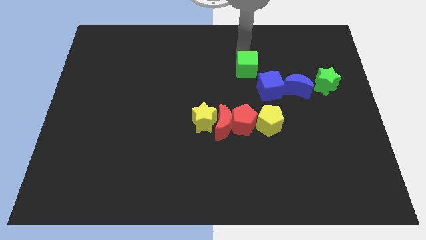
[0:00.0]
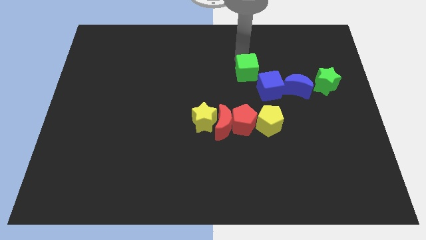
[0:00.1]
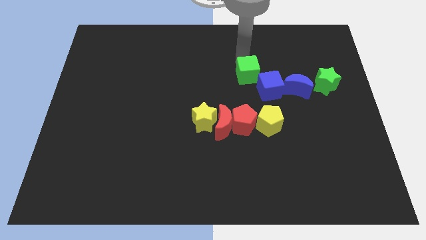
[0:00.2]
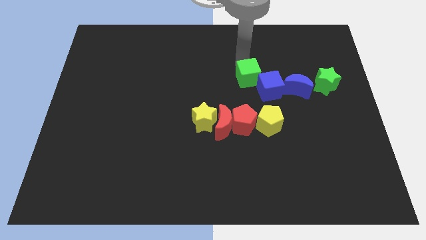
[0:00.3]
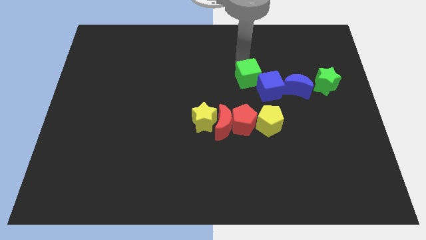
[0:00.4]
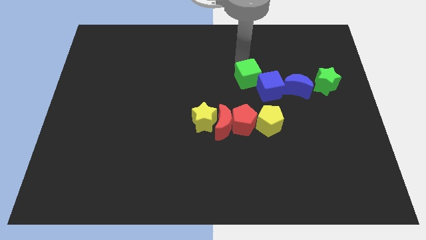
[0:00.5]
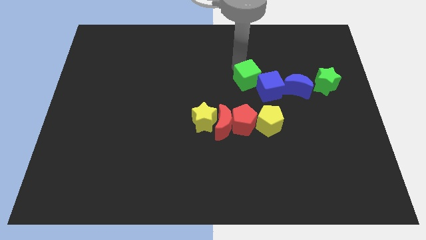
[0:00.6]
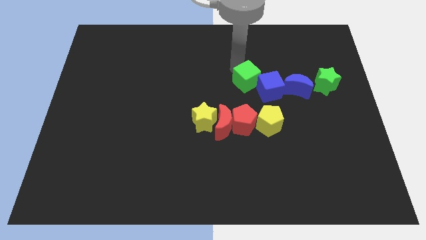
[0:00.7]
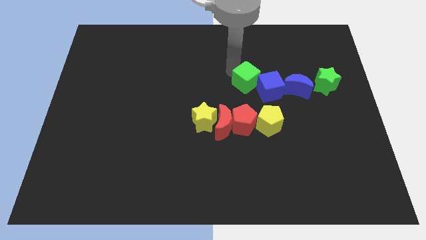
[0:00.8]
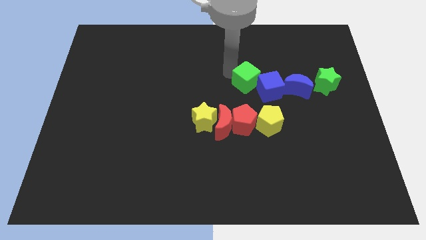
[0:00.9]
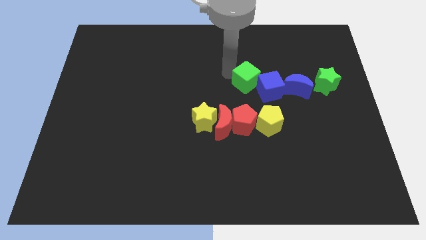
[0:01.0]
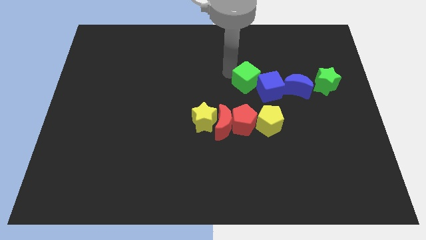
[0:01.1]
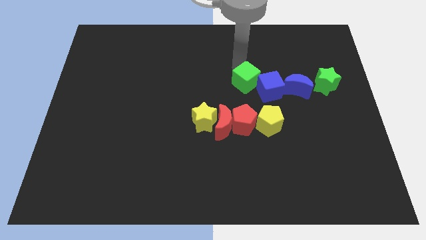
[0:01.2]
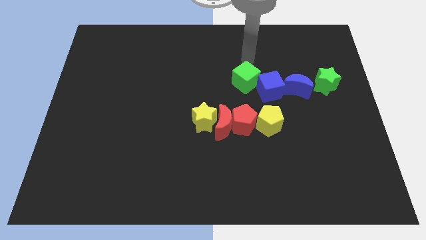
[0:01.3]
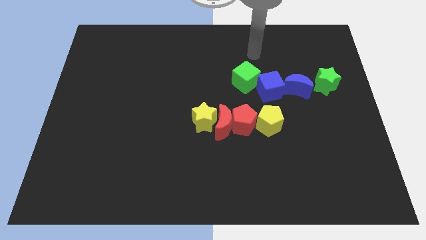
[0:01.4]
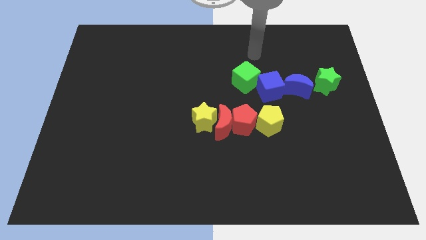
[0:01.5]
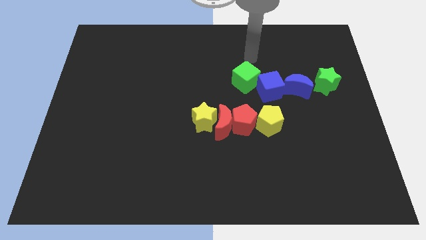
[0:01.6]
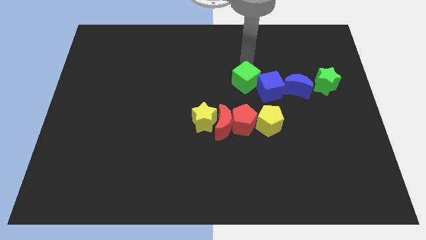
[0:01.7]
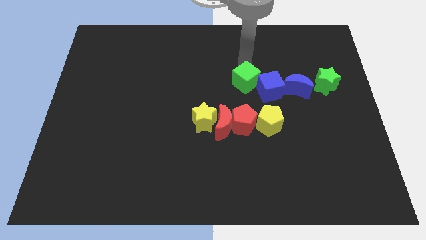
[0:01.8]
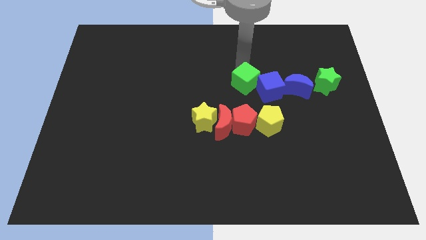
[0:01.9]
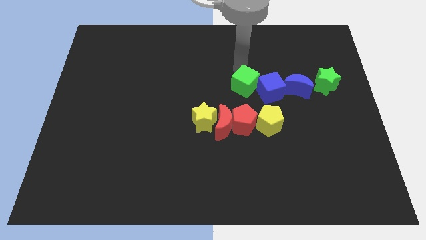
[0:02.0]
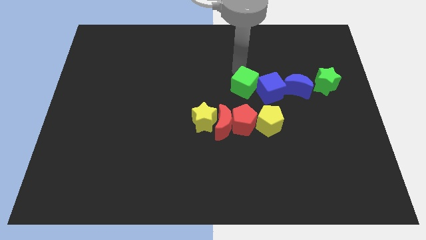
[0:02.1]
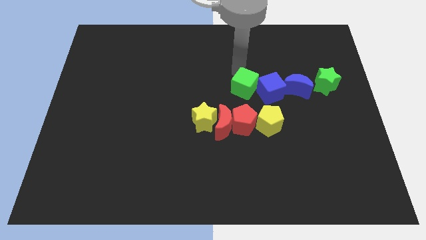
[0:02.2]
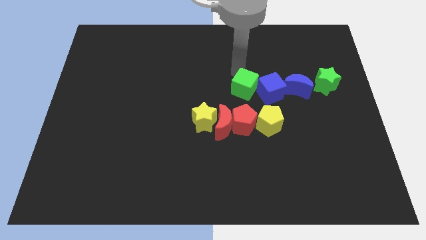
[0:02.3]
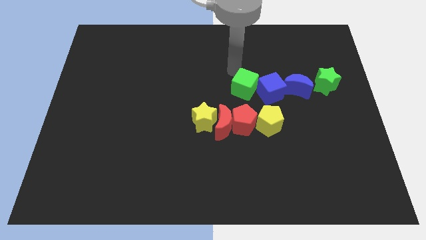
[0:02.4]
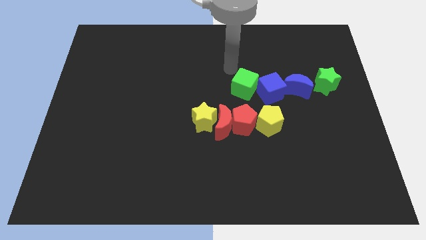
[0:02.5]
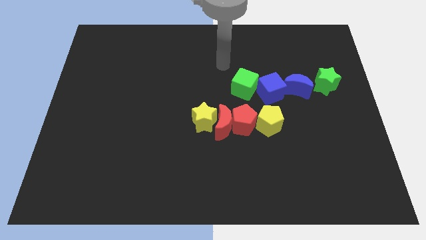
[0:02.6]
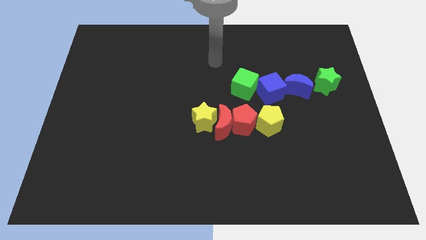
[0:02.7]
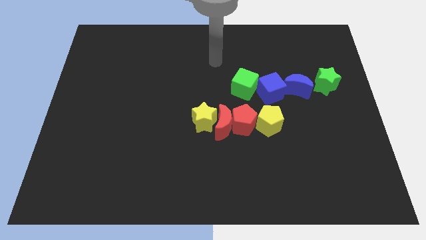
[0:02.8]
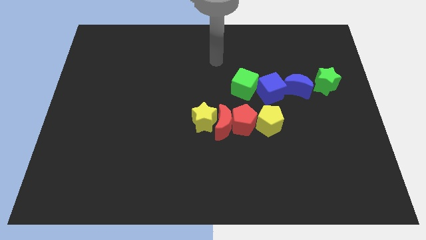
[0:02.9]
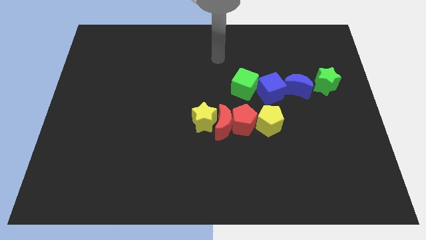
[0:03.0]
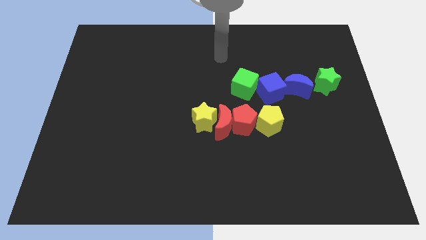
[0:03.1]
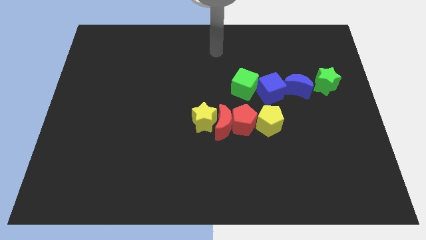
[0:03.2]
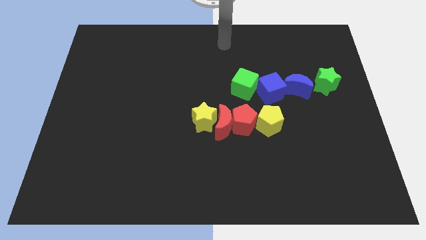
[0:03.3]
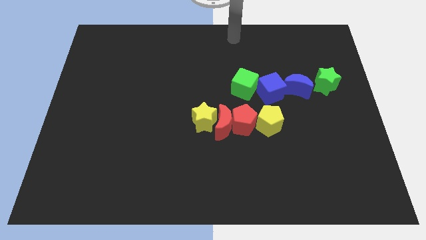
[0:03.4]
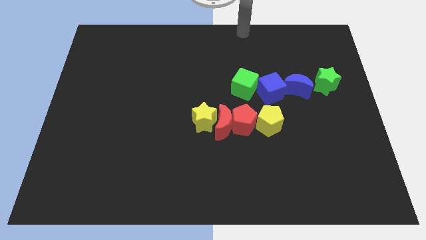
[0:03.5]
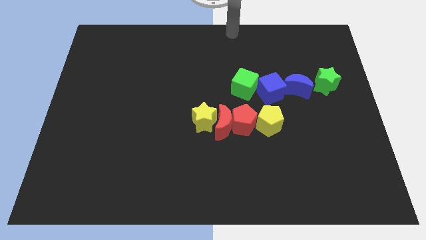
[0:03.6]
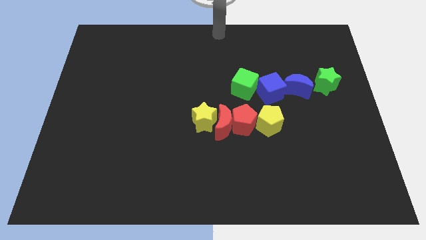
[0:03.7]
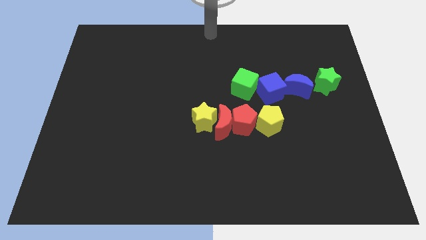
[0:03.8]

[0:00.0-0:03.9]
push the green cube to the left side of the blue cube

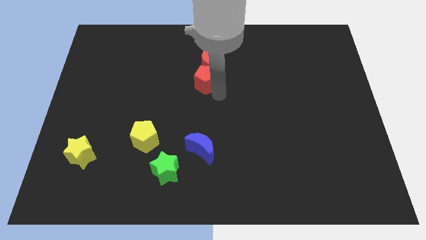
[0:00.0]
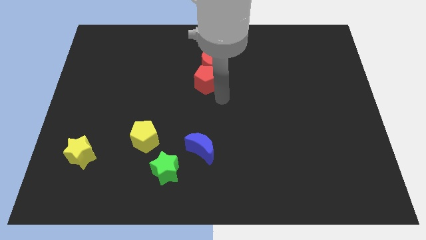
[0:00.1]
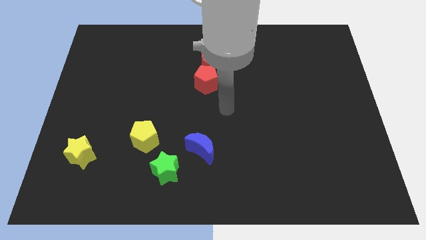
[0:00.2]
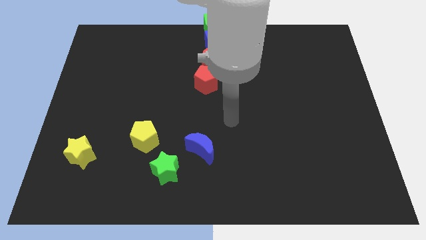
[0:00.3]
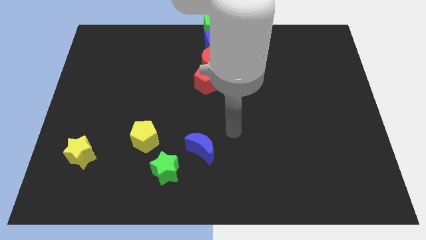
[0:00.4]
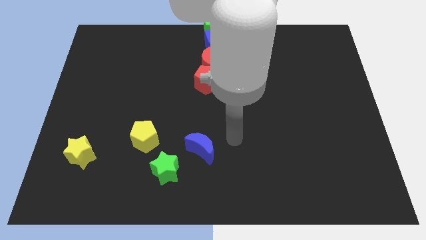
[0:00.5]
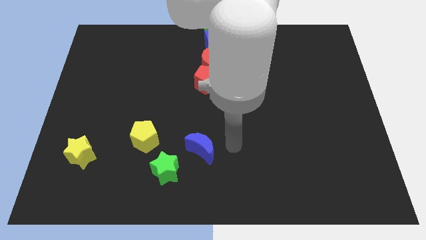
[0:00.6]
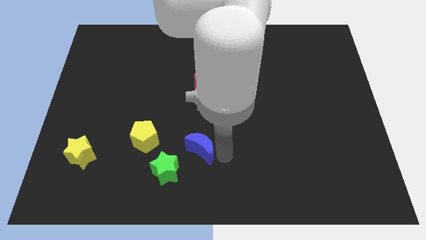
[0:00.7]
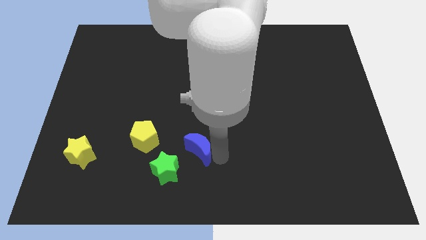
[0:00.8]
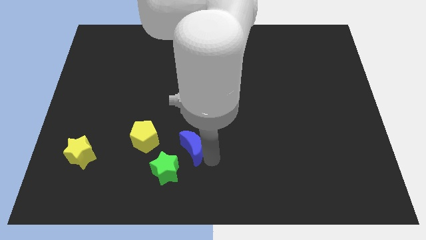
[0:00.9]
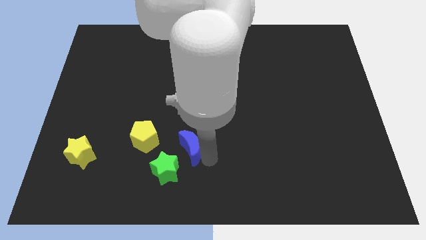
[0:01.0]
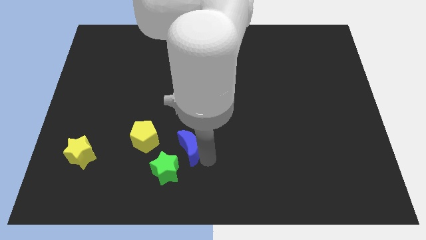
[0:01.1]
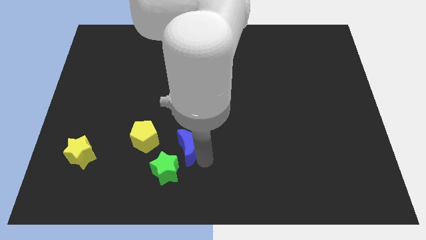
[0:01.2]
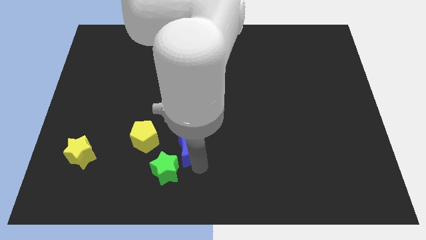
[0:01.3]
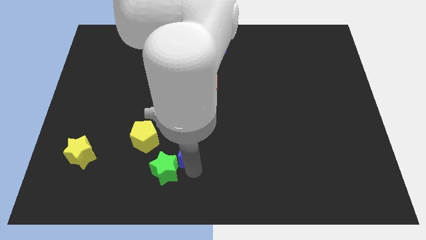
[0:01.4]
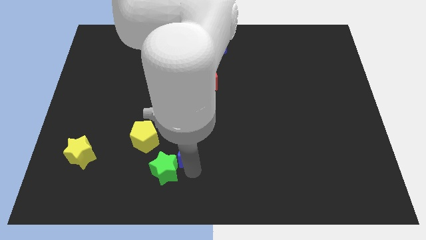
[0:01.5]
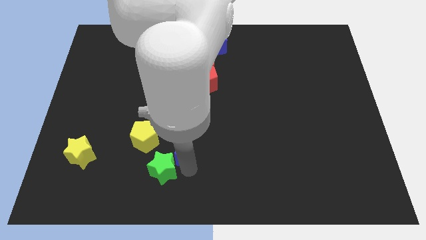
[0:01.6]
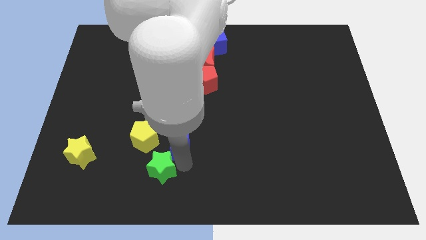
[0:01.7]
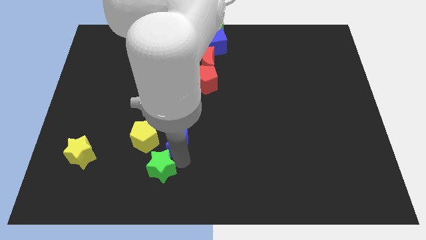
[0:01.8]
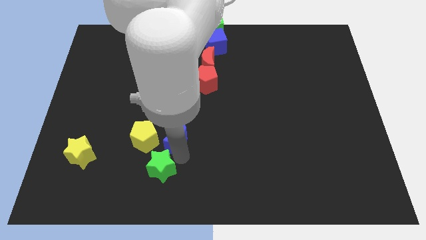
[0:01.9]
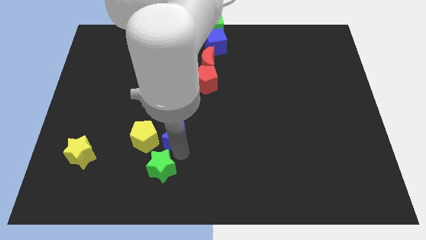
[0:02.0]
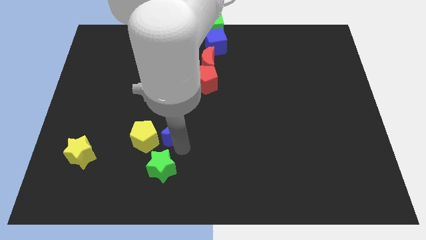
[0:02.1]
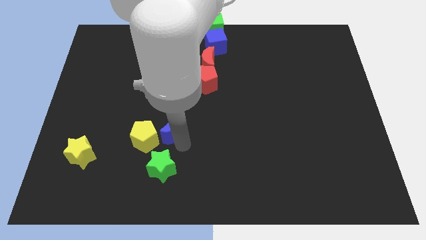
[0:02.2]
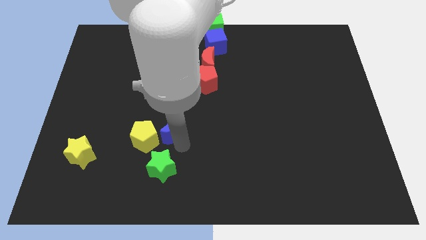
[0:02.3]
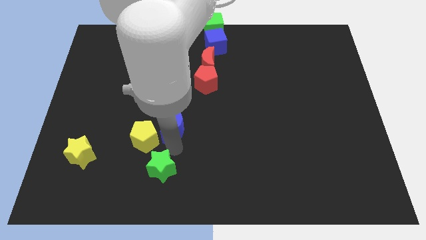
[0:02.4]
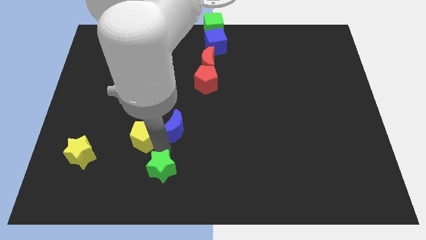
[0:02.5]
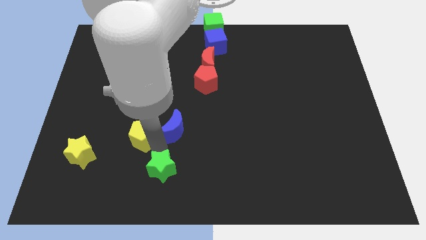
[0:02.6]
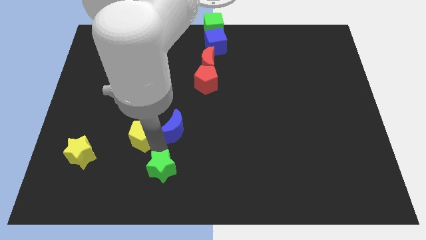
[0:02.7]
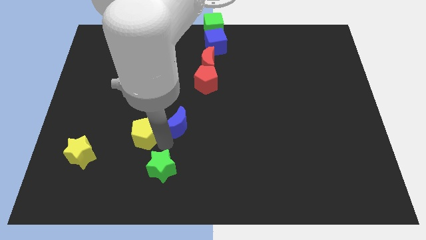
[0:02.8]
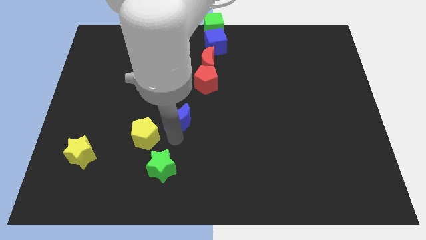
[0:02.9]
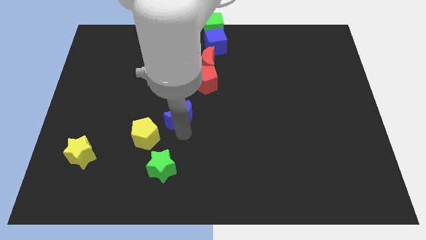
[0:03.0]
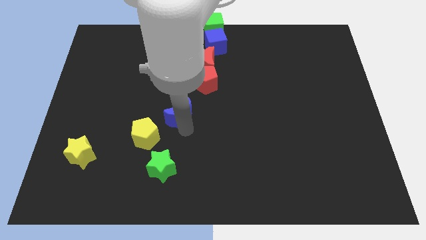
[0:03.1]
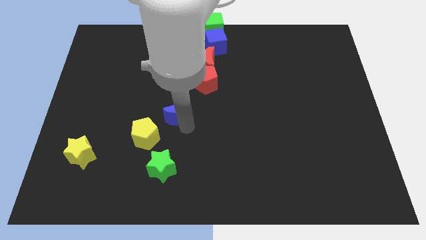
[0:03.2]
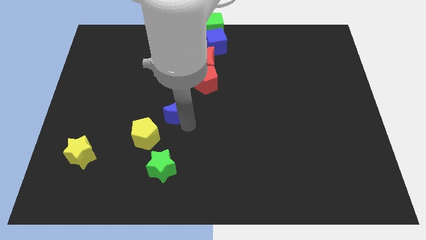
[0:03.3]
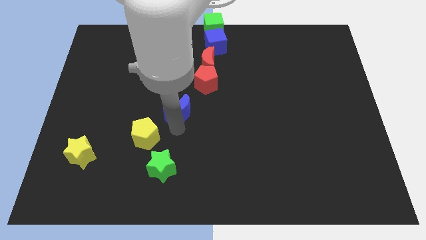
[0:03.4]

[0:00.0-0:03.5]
move blue crescent right diagonally towards yellow pentagon

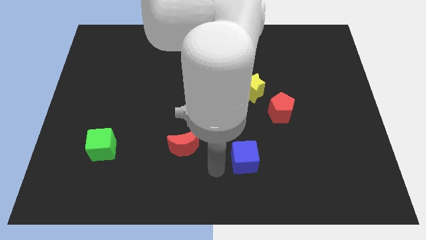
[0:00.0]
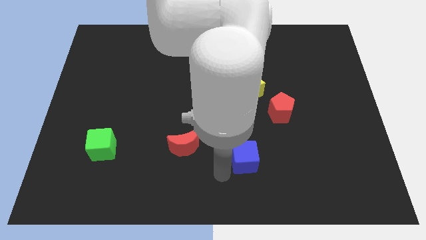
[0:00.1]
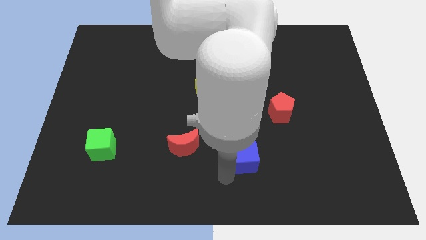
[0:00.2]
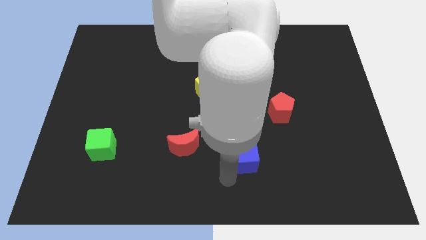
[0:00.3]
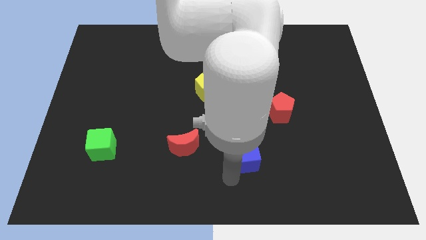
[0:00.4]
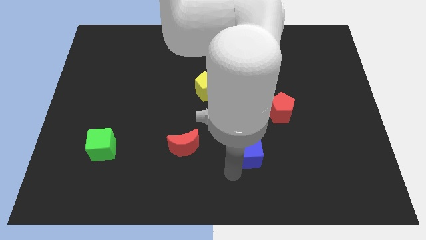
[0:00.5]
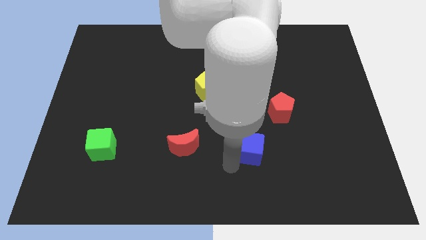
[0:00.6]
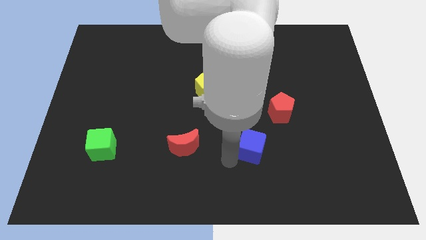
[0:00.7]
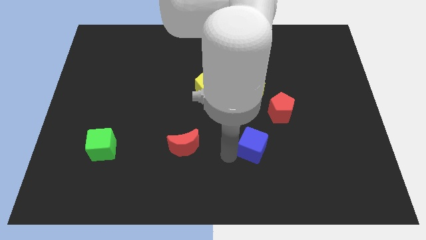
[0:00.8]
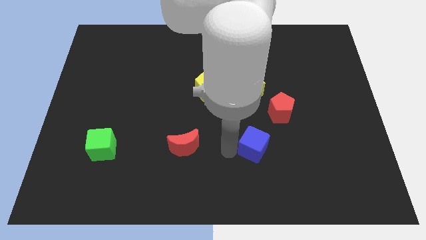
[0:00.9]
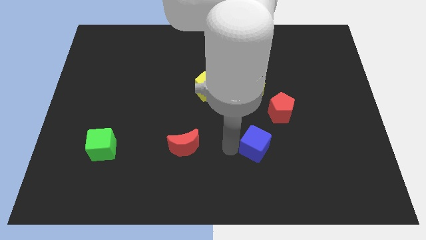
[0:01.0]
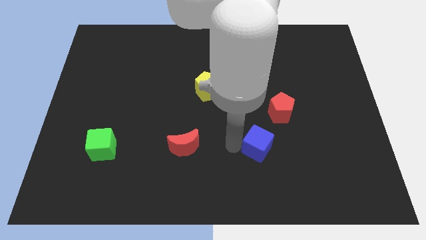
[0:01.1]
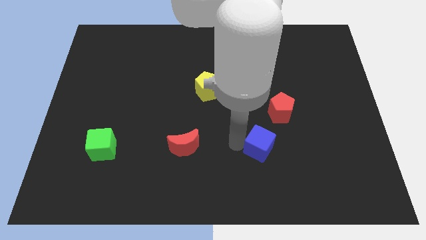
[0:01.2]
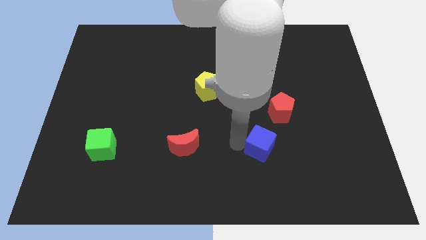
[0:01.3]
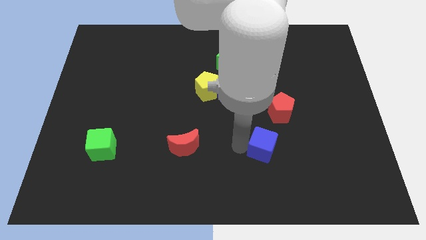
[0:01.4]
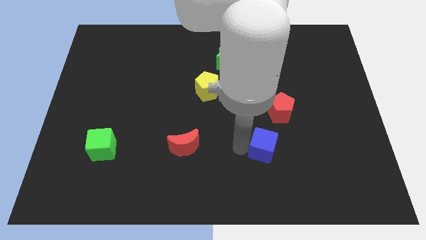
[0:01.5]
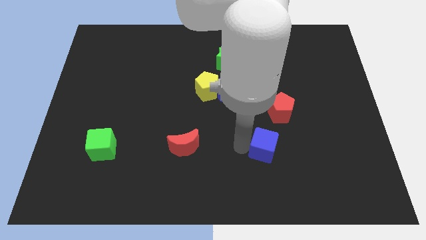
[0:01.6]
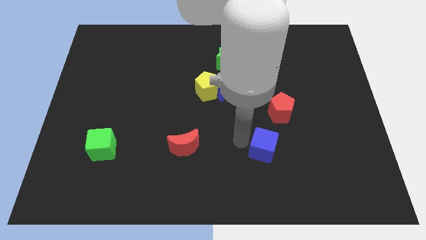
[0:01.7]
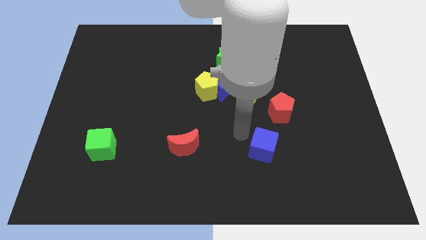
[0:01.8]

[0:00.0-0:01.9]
push the blue cube towards the bottom of the red pentagon
